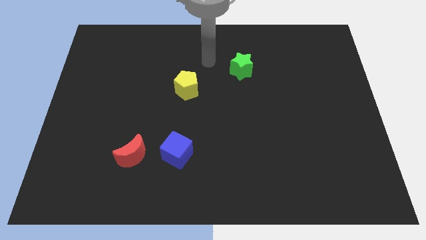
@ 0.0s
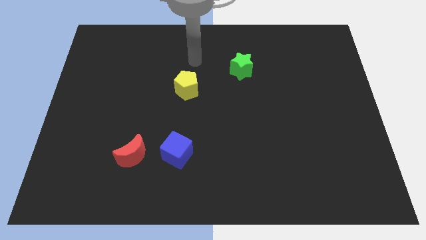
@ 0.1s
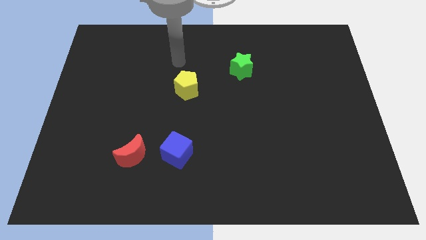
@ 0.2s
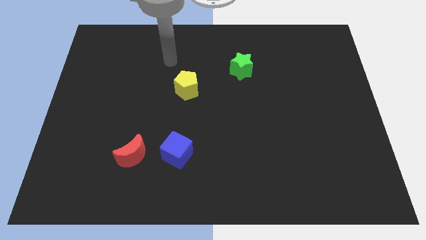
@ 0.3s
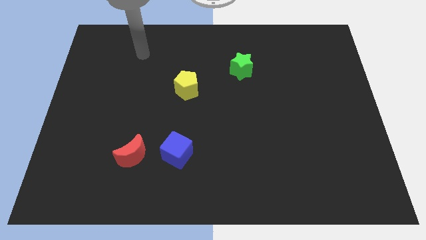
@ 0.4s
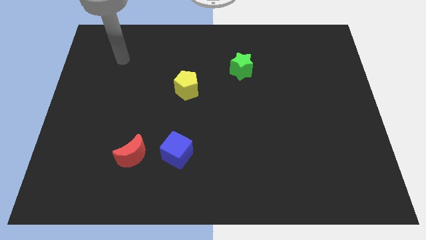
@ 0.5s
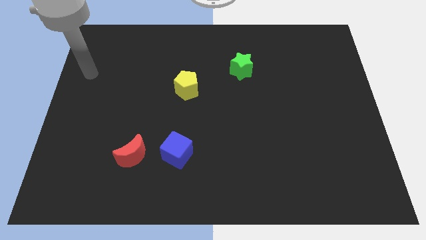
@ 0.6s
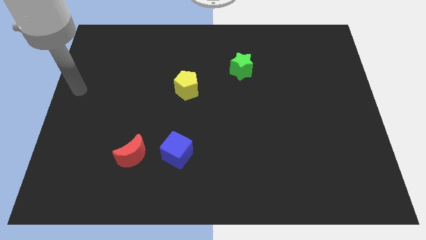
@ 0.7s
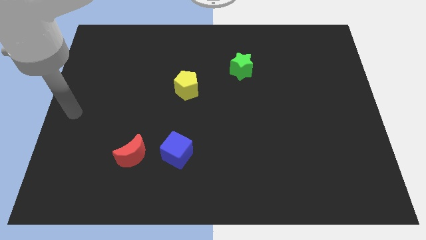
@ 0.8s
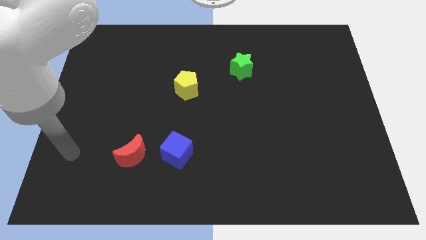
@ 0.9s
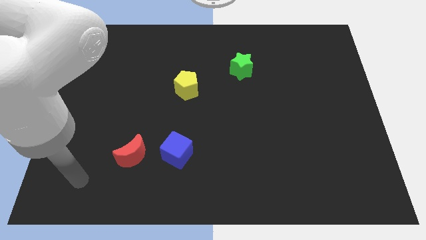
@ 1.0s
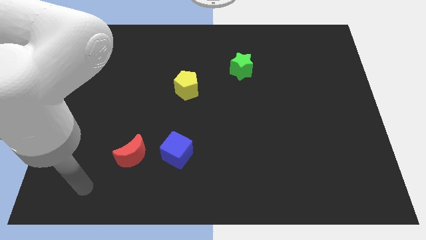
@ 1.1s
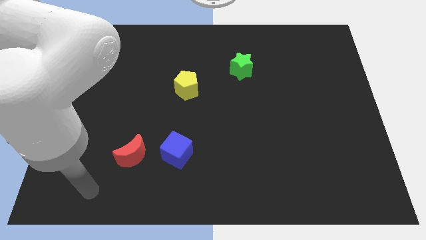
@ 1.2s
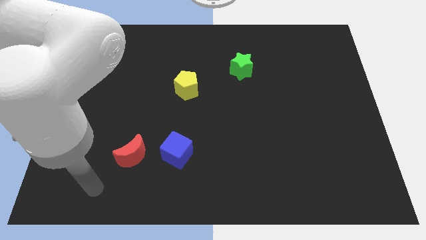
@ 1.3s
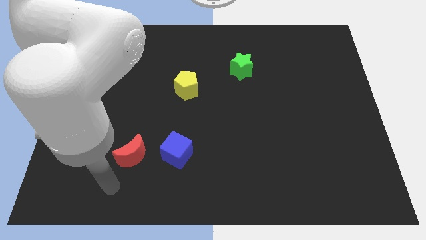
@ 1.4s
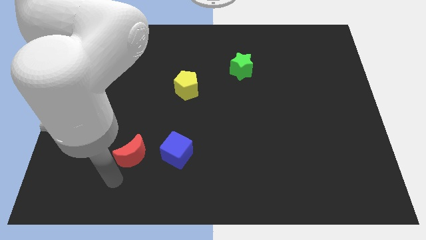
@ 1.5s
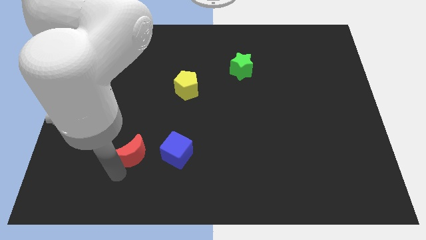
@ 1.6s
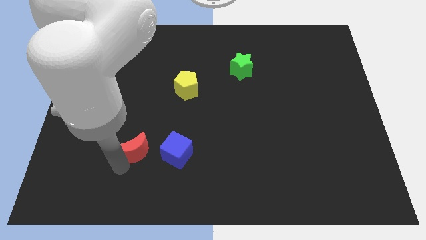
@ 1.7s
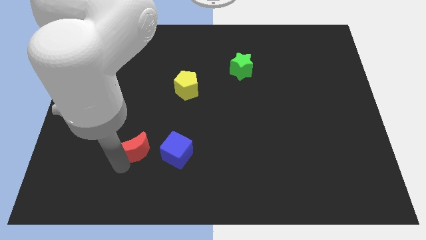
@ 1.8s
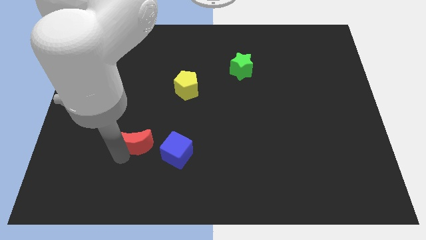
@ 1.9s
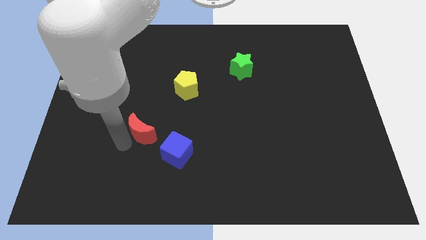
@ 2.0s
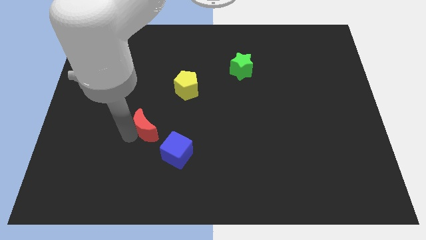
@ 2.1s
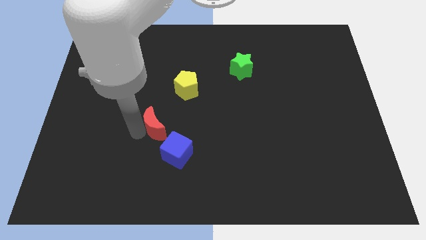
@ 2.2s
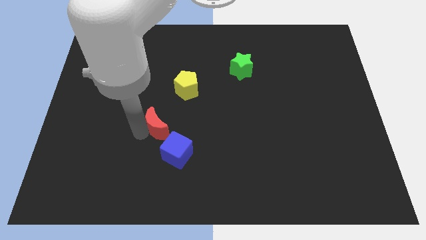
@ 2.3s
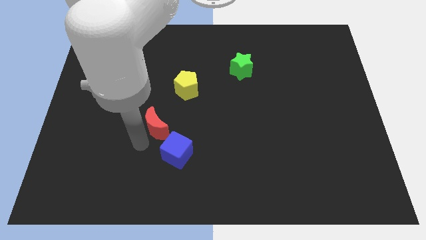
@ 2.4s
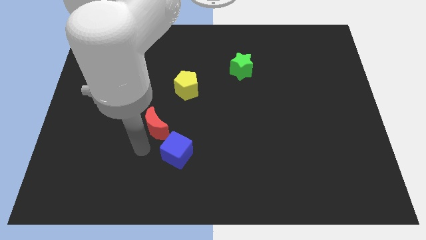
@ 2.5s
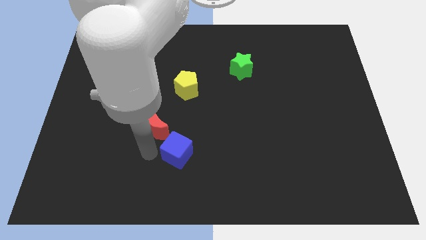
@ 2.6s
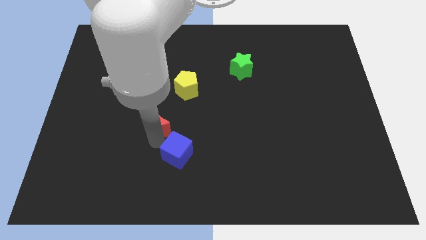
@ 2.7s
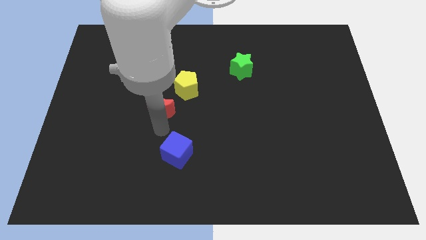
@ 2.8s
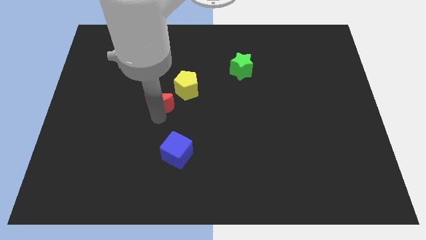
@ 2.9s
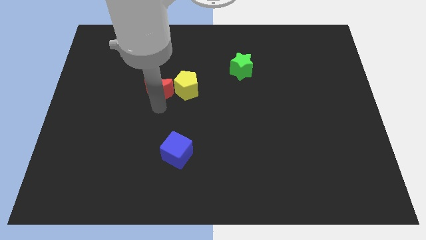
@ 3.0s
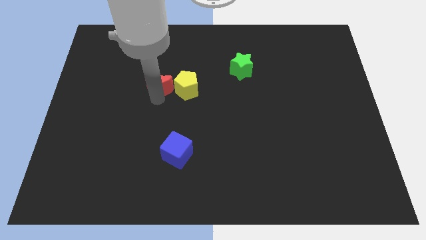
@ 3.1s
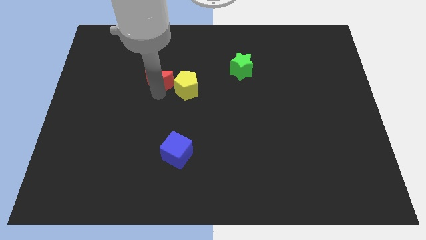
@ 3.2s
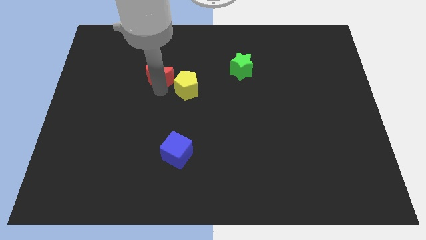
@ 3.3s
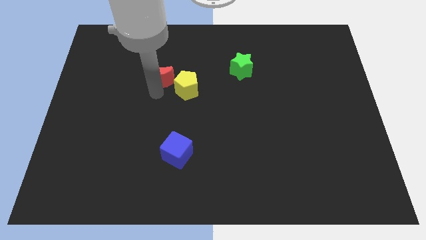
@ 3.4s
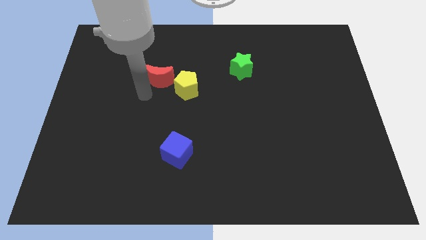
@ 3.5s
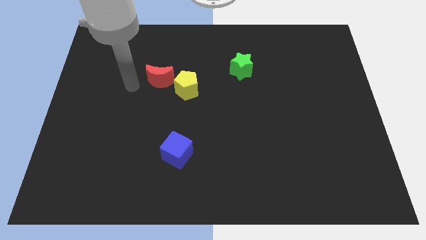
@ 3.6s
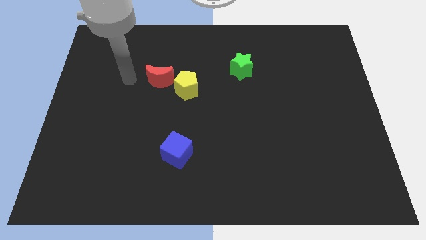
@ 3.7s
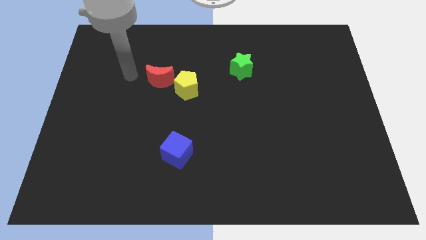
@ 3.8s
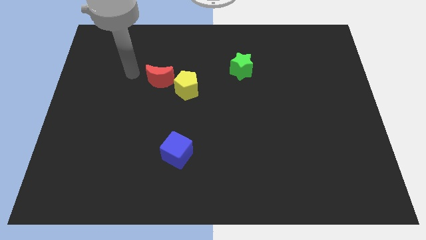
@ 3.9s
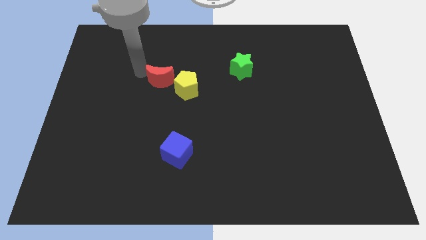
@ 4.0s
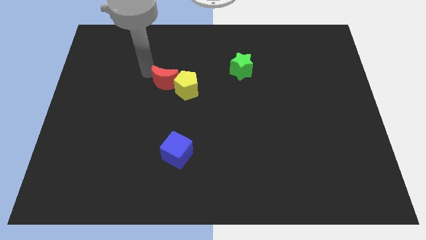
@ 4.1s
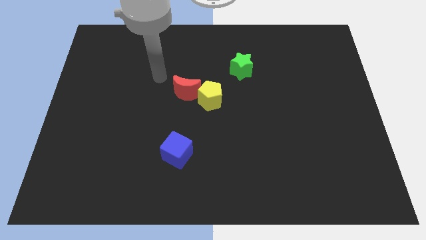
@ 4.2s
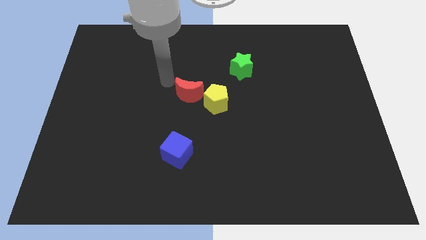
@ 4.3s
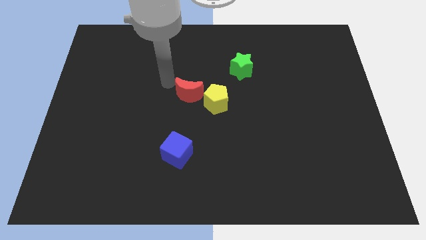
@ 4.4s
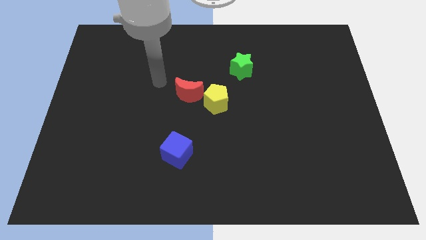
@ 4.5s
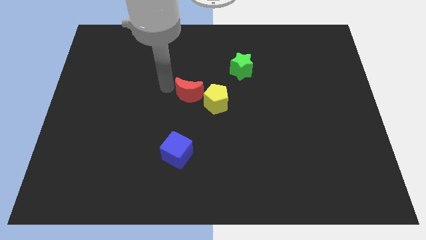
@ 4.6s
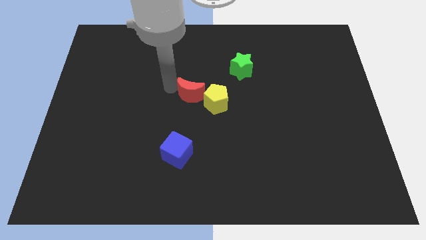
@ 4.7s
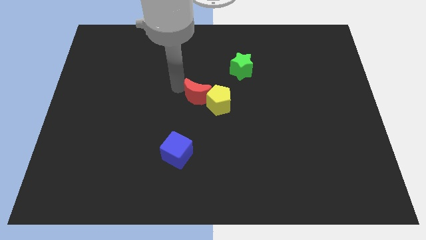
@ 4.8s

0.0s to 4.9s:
put the moon close to the pentagon

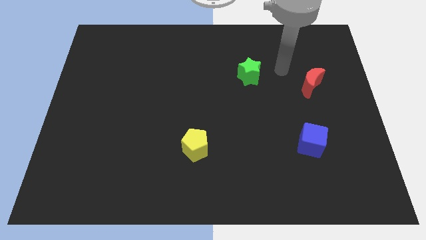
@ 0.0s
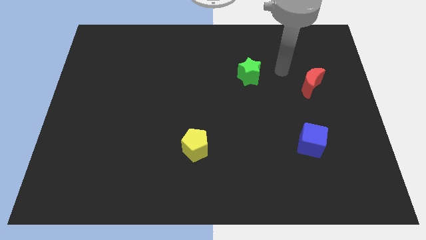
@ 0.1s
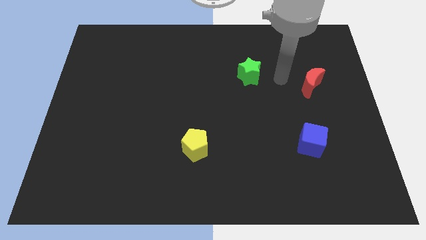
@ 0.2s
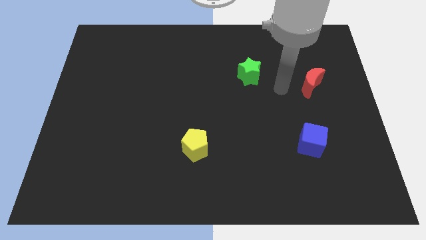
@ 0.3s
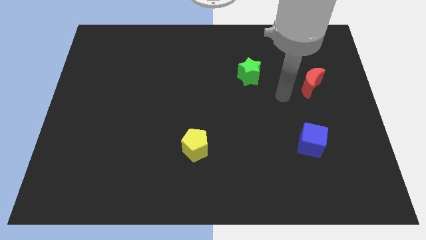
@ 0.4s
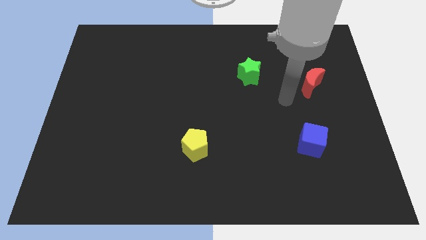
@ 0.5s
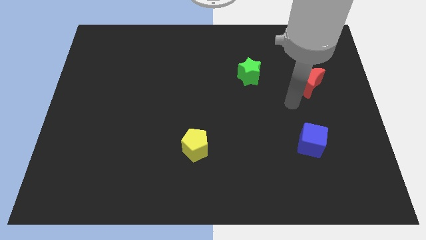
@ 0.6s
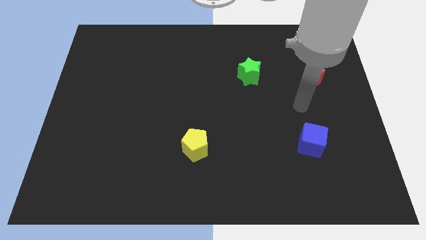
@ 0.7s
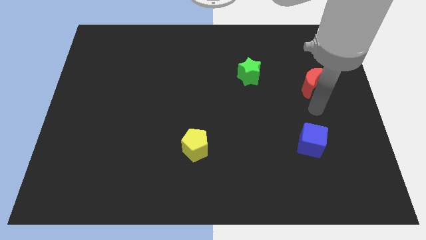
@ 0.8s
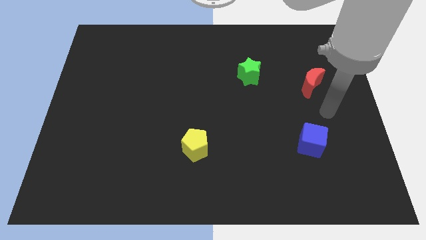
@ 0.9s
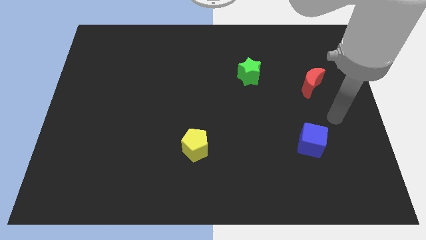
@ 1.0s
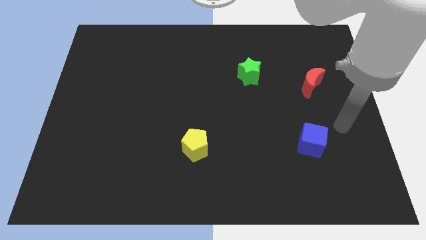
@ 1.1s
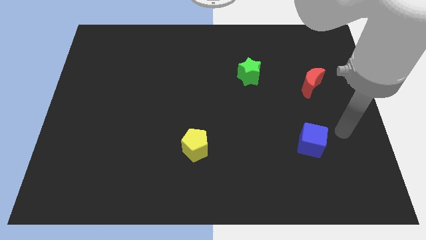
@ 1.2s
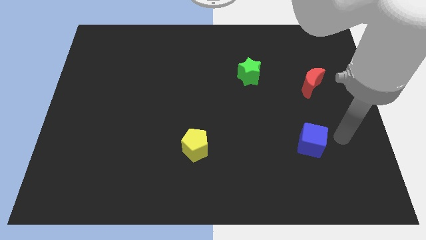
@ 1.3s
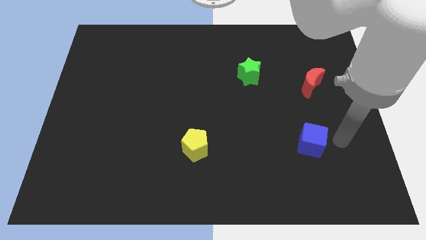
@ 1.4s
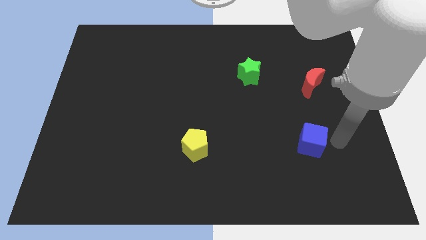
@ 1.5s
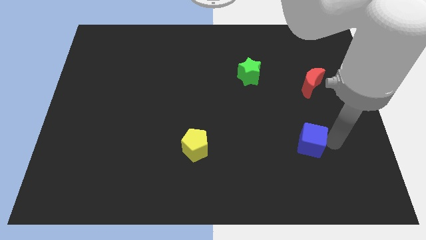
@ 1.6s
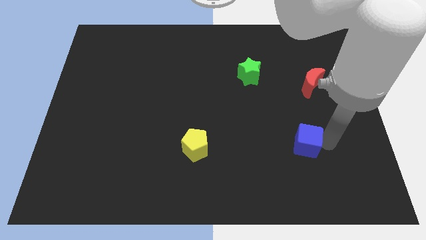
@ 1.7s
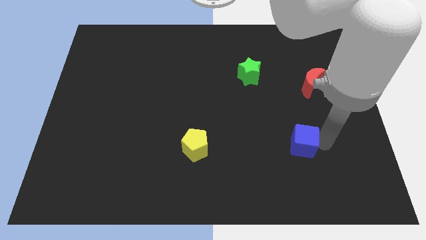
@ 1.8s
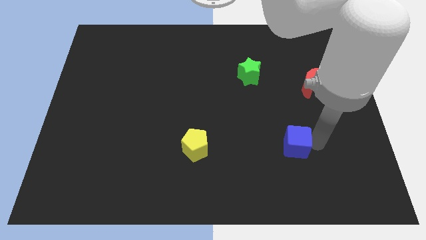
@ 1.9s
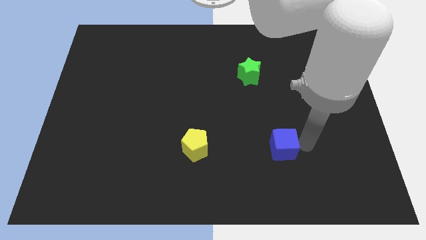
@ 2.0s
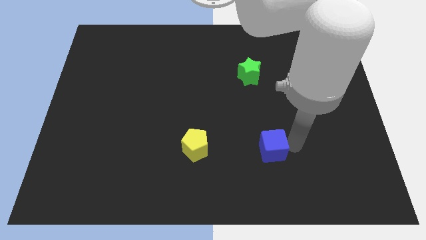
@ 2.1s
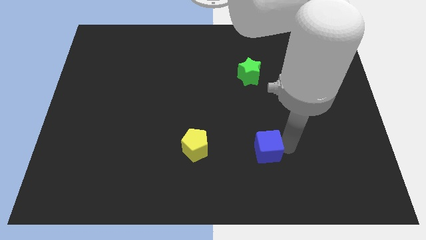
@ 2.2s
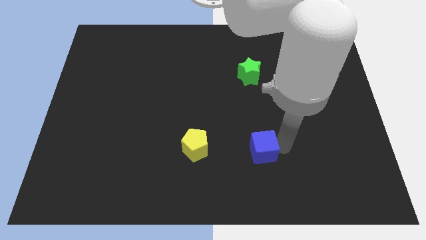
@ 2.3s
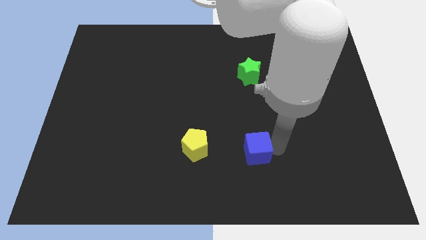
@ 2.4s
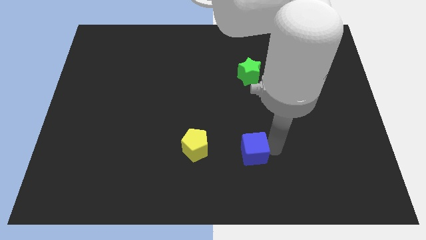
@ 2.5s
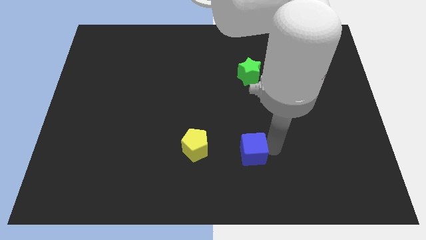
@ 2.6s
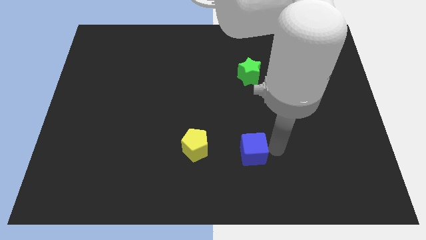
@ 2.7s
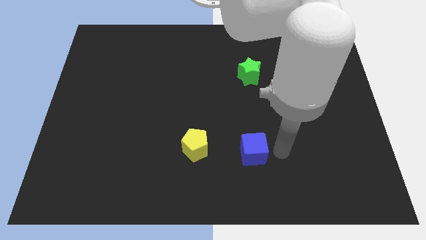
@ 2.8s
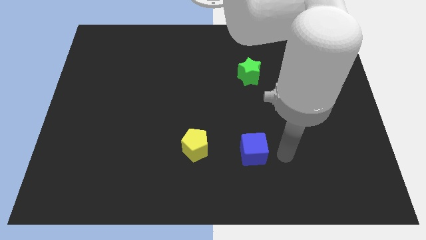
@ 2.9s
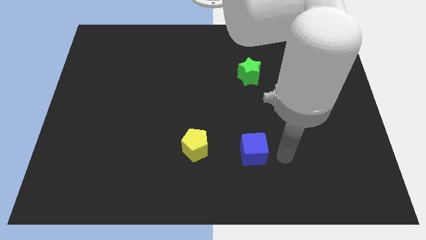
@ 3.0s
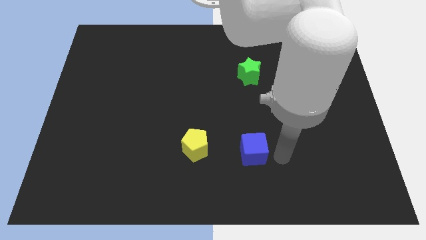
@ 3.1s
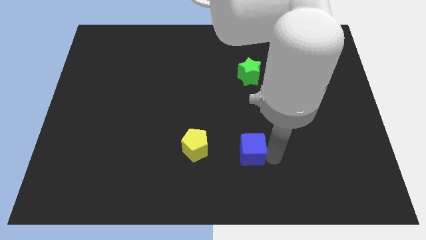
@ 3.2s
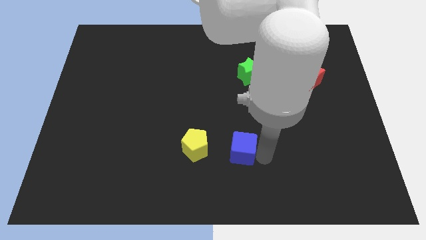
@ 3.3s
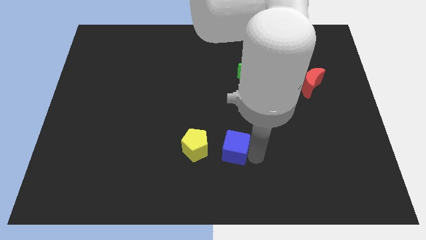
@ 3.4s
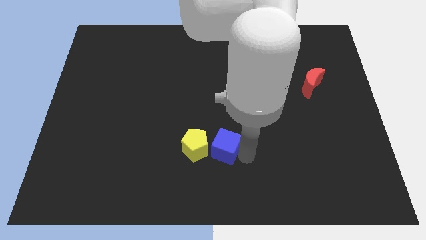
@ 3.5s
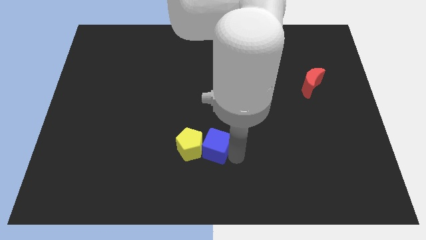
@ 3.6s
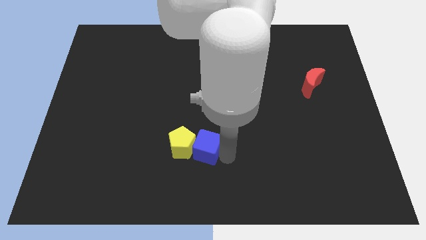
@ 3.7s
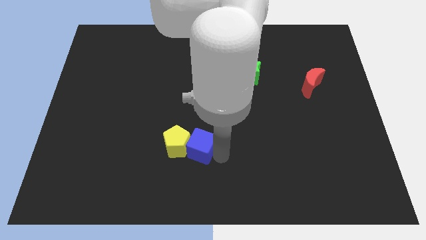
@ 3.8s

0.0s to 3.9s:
put the cube towards the yellow pentagon
